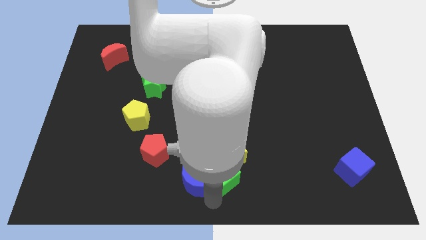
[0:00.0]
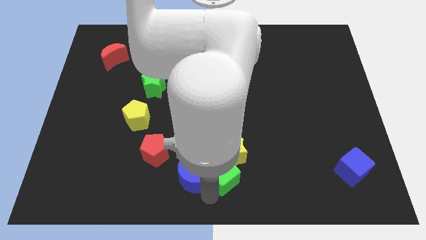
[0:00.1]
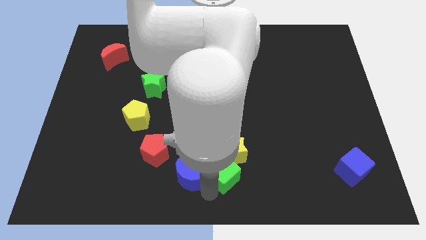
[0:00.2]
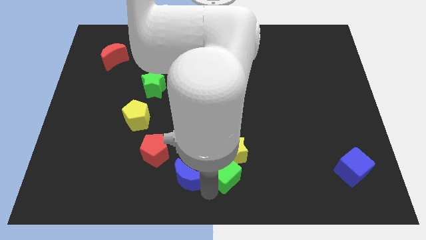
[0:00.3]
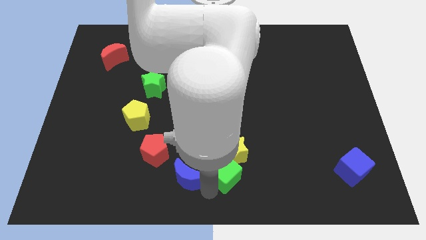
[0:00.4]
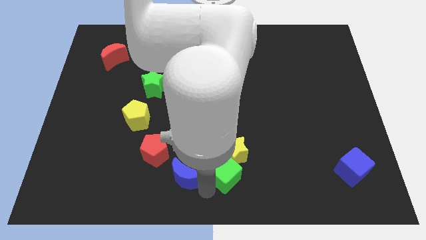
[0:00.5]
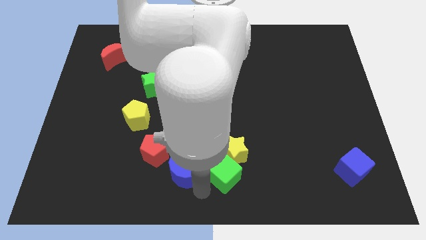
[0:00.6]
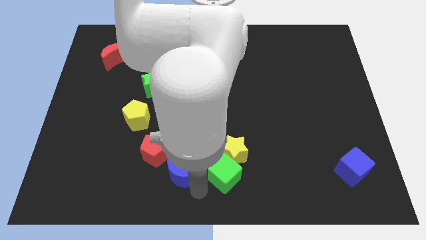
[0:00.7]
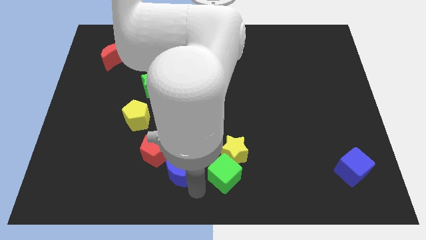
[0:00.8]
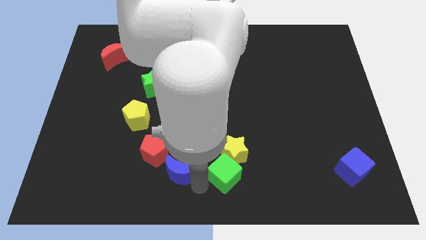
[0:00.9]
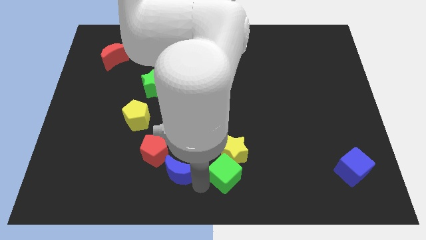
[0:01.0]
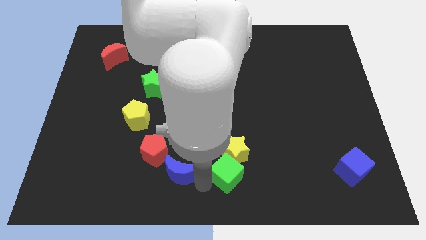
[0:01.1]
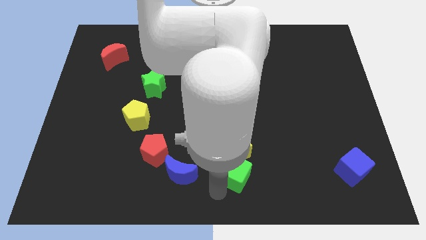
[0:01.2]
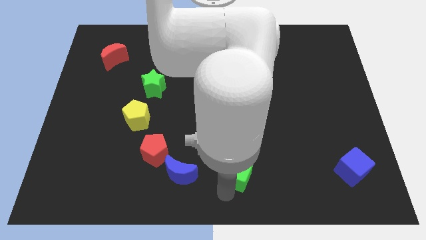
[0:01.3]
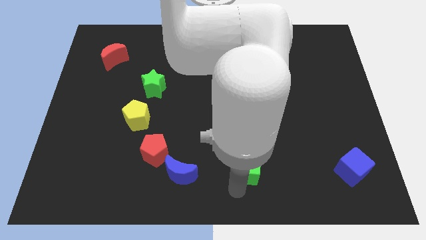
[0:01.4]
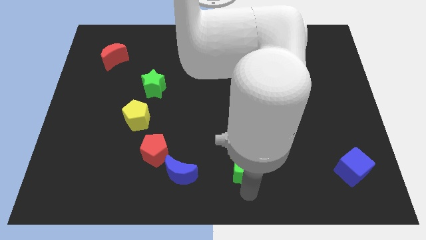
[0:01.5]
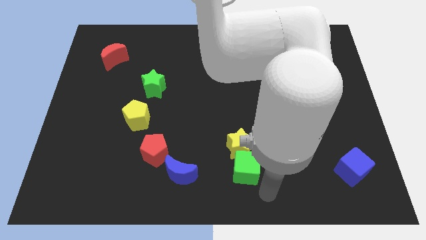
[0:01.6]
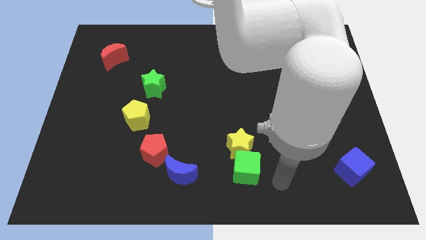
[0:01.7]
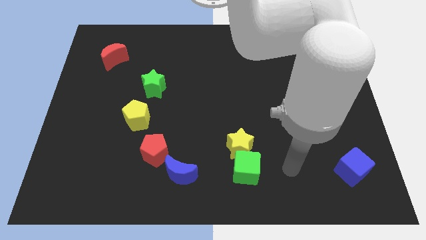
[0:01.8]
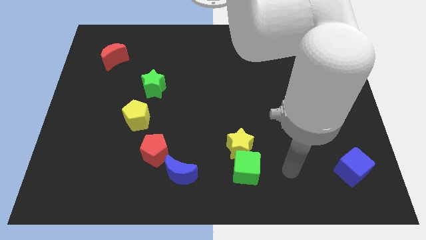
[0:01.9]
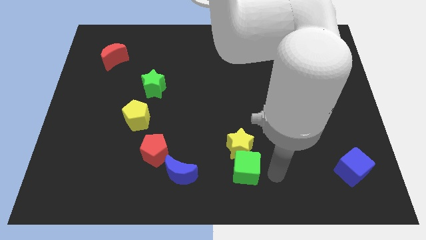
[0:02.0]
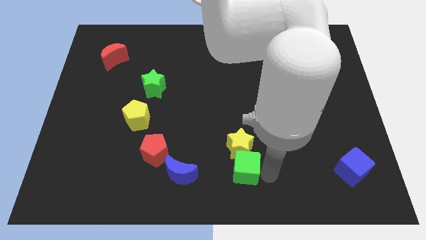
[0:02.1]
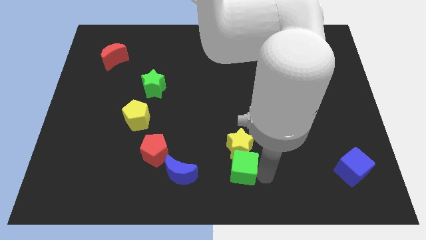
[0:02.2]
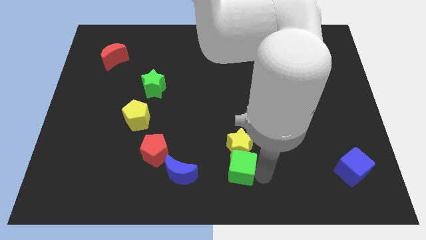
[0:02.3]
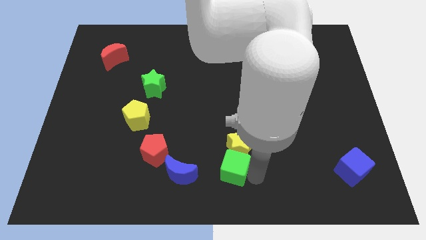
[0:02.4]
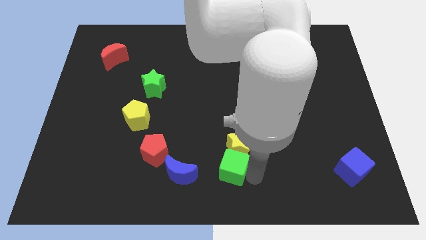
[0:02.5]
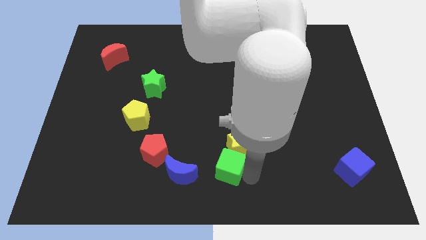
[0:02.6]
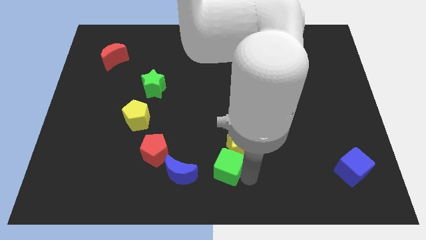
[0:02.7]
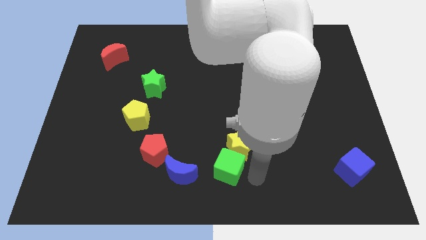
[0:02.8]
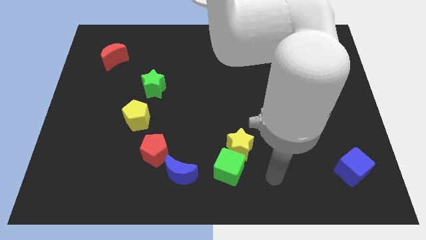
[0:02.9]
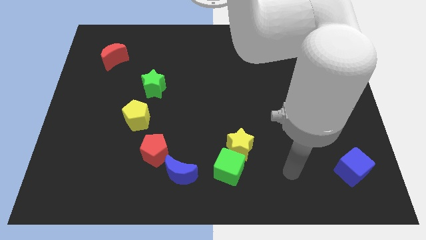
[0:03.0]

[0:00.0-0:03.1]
push the green cube slightly to the left

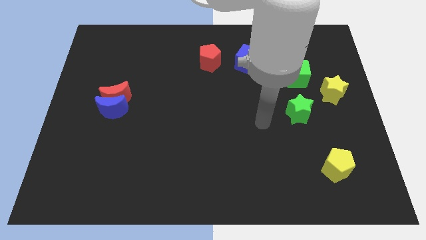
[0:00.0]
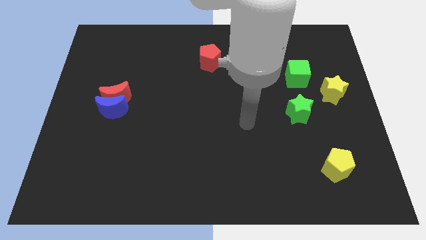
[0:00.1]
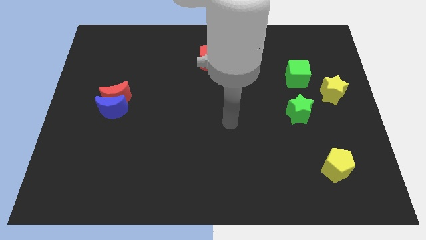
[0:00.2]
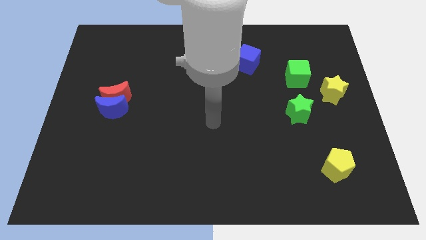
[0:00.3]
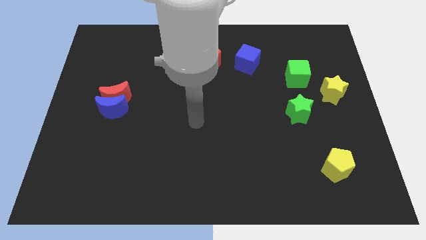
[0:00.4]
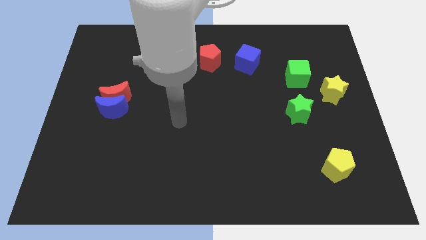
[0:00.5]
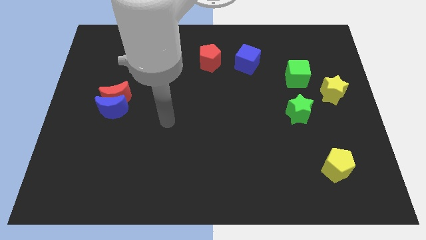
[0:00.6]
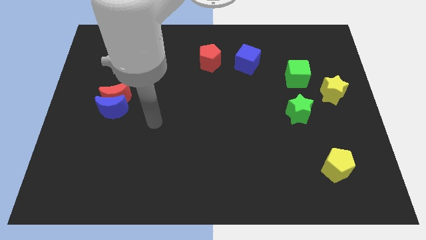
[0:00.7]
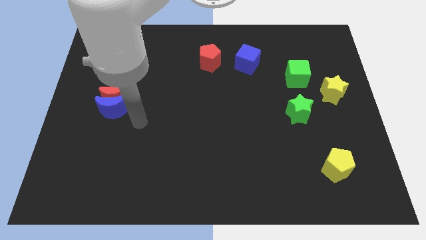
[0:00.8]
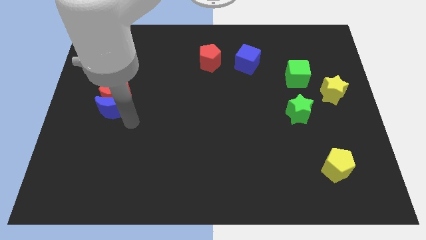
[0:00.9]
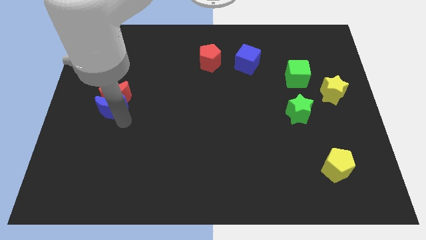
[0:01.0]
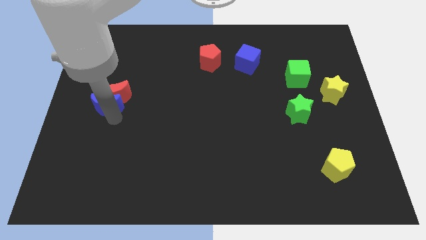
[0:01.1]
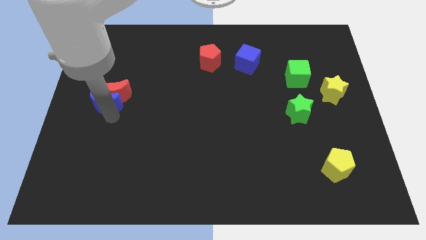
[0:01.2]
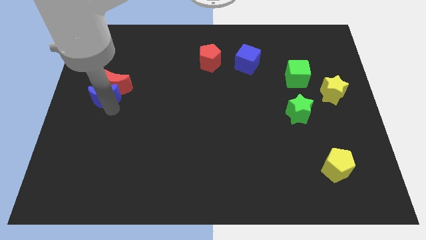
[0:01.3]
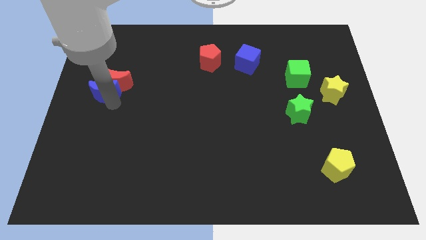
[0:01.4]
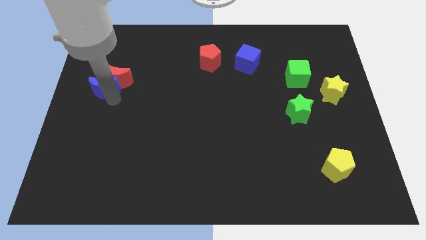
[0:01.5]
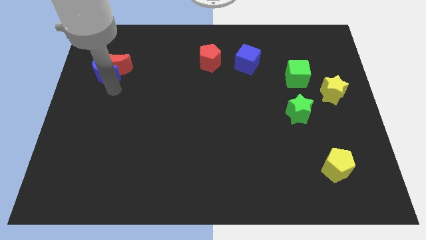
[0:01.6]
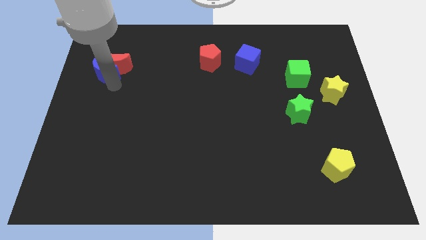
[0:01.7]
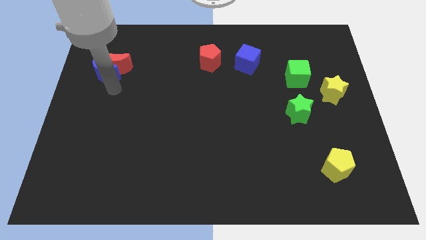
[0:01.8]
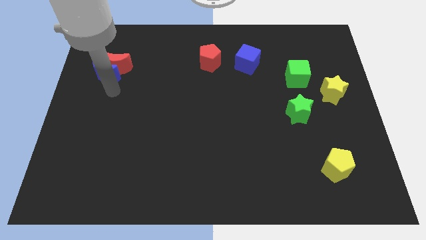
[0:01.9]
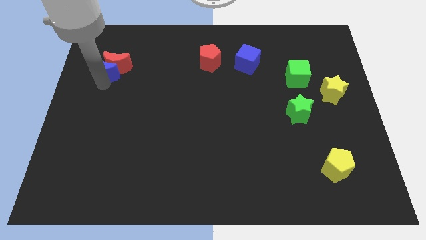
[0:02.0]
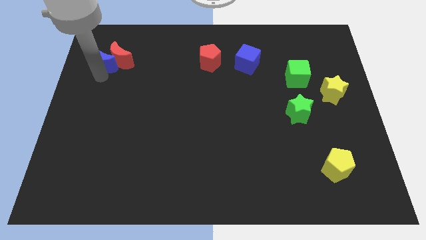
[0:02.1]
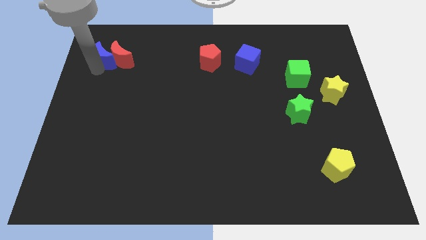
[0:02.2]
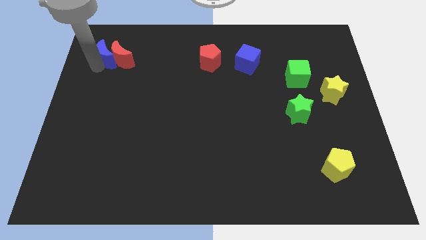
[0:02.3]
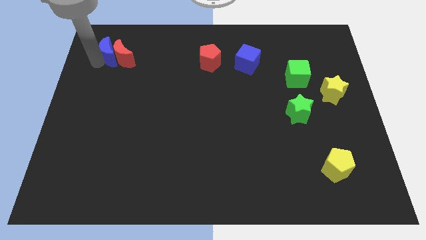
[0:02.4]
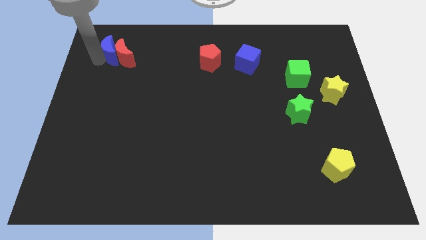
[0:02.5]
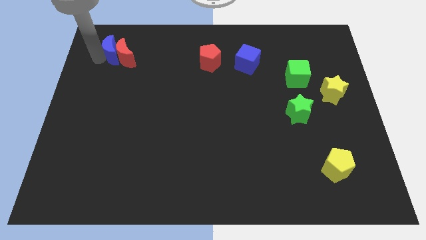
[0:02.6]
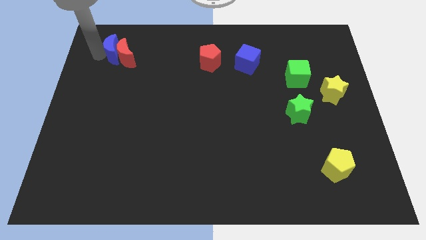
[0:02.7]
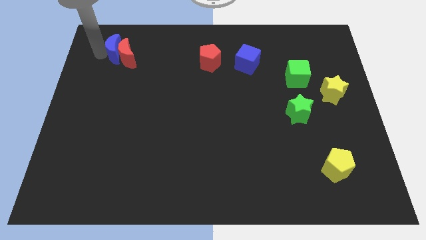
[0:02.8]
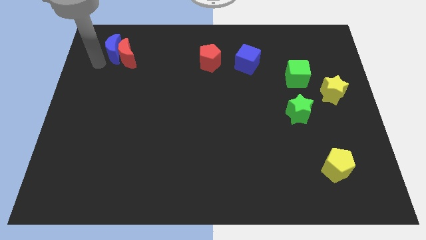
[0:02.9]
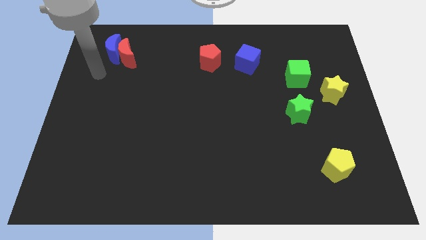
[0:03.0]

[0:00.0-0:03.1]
move blue and red moons towards top left

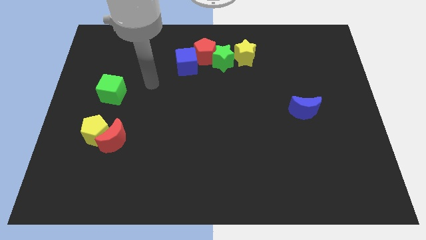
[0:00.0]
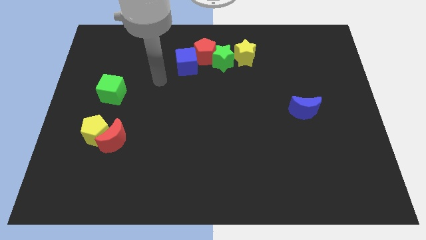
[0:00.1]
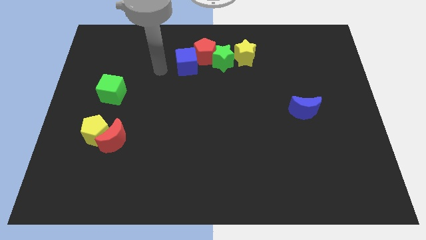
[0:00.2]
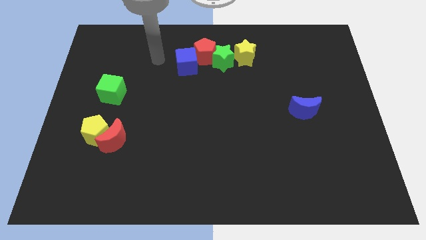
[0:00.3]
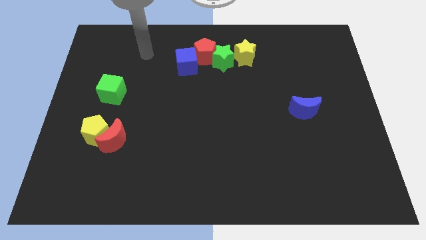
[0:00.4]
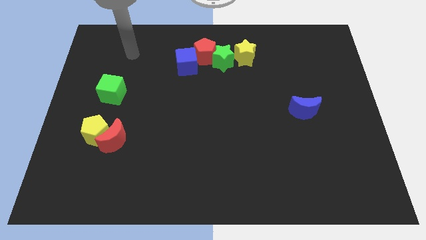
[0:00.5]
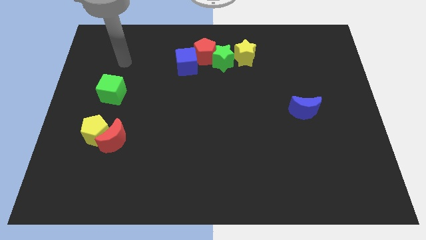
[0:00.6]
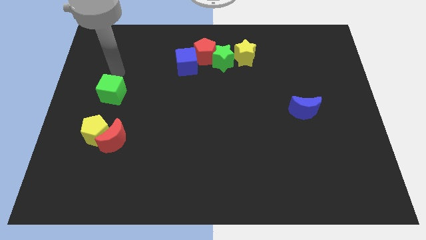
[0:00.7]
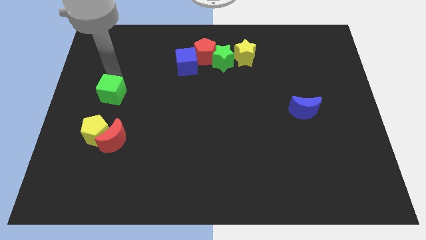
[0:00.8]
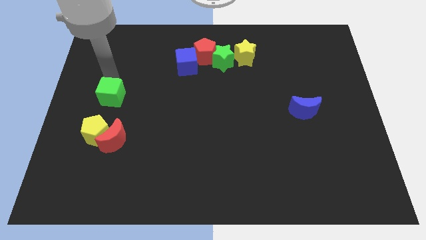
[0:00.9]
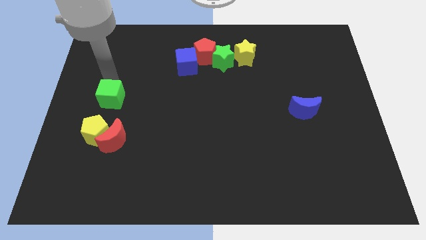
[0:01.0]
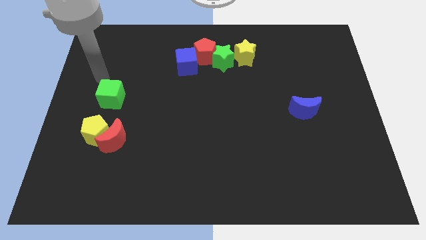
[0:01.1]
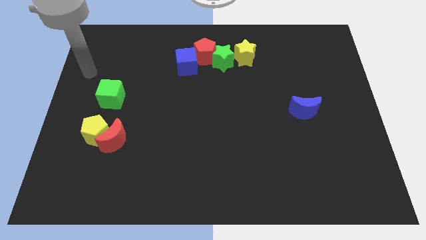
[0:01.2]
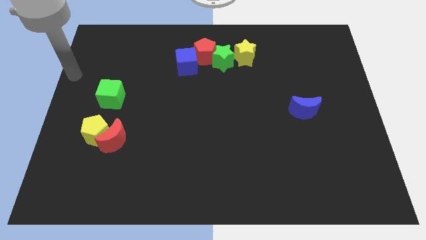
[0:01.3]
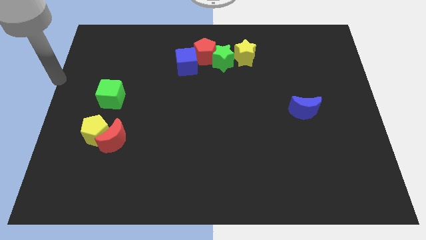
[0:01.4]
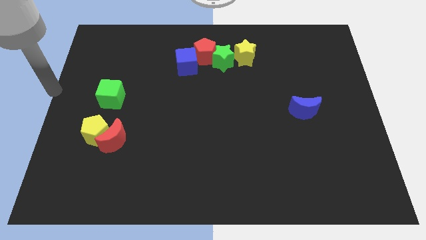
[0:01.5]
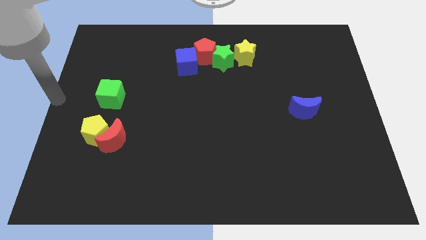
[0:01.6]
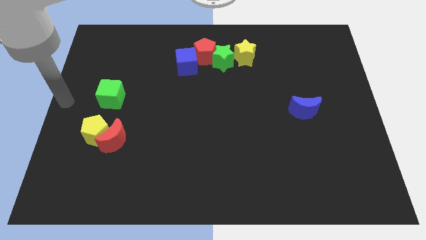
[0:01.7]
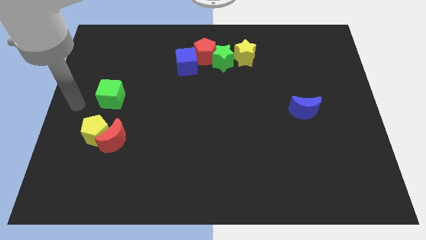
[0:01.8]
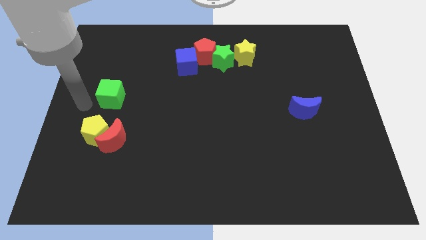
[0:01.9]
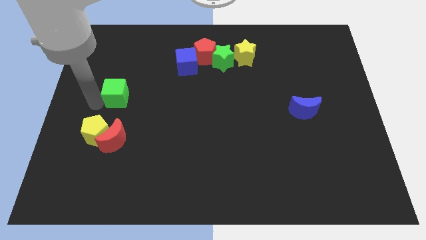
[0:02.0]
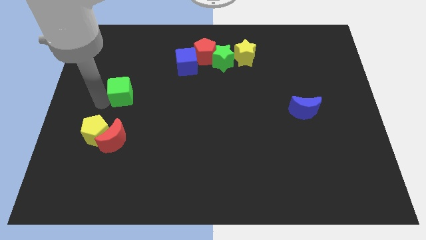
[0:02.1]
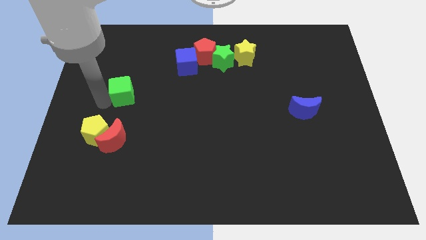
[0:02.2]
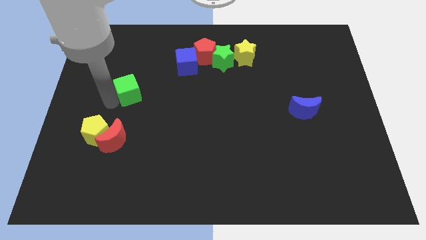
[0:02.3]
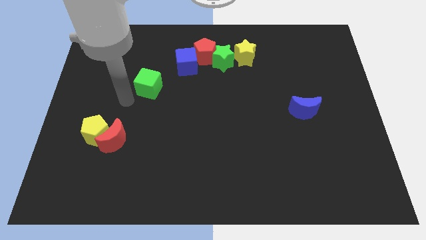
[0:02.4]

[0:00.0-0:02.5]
slide the green cube towards the bottom left to the blue cube

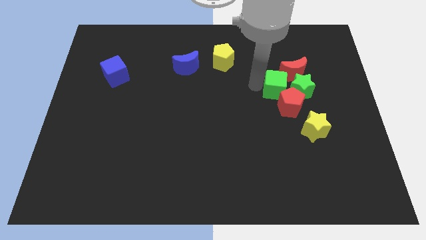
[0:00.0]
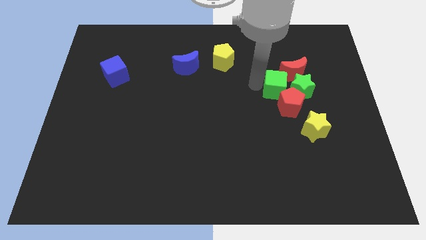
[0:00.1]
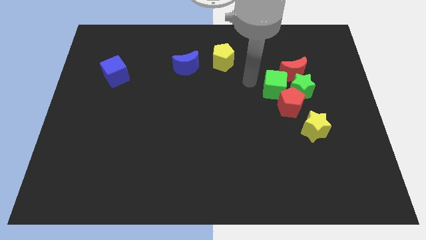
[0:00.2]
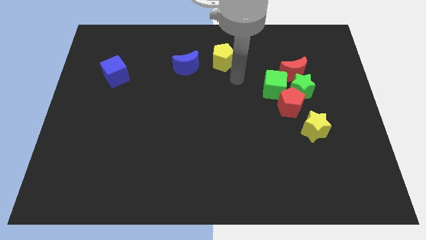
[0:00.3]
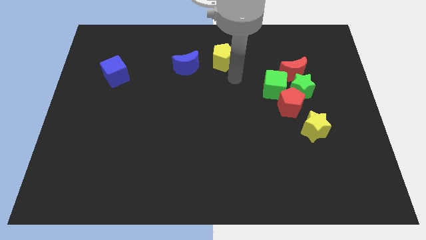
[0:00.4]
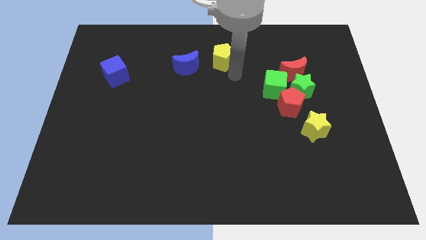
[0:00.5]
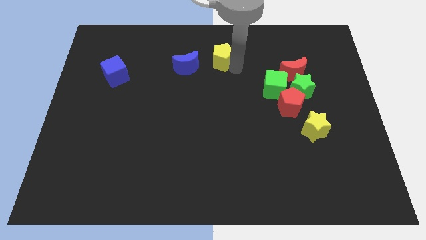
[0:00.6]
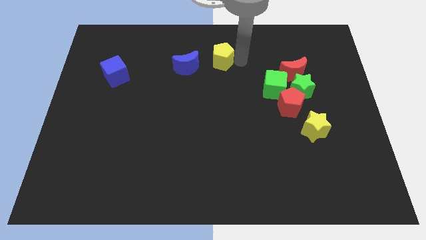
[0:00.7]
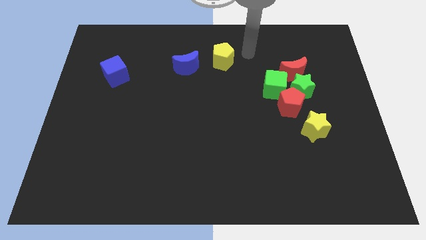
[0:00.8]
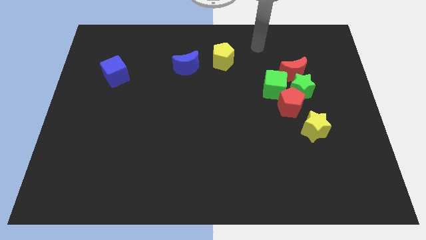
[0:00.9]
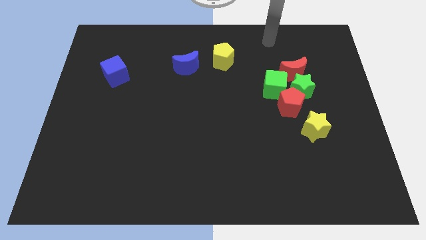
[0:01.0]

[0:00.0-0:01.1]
take your arm away from the green cube
